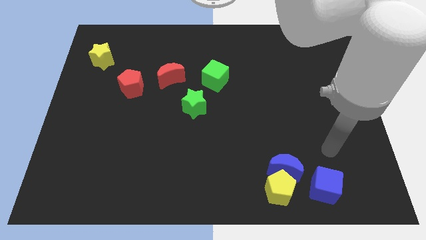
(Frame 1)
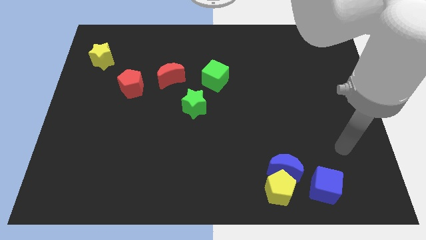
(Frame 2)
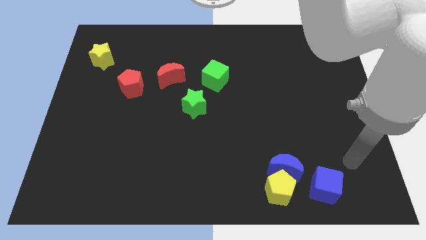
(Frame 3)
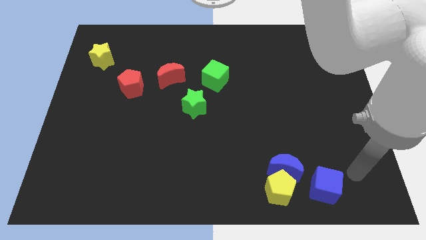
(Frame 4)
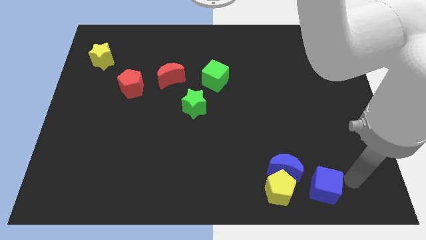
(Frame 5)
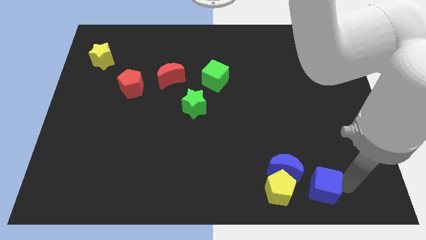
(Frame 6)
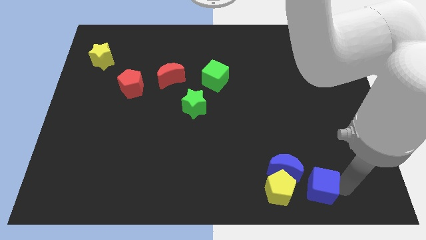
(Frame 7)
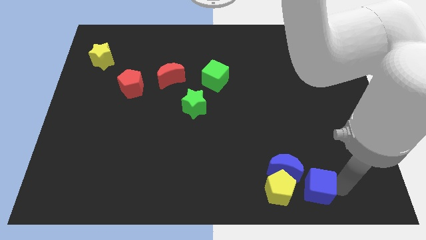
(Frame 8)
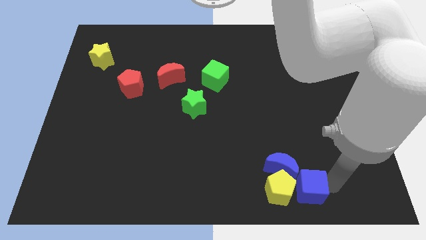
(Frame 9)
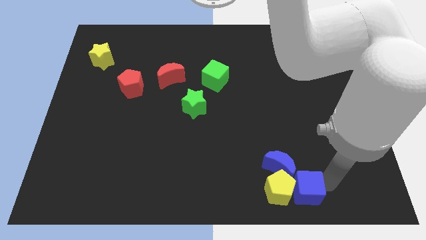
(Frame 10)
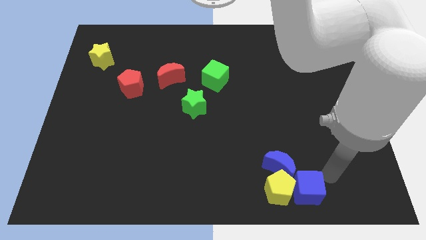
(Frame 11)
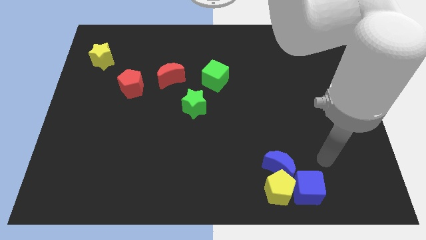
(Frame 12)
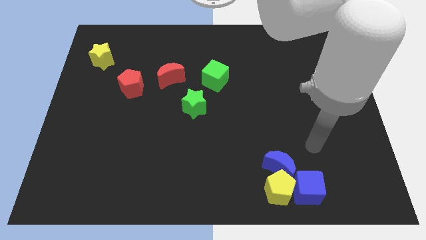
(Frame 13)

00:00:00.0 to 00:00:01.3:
push the blue cube into the blue crescent and yellow pentagon

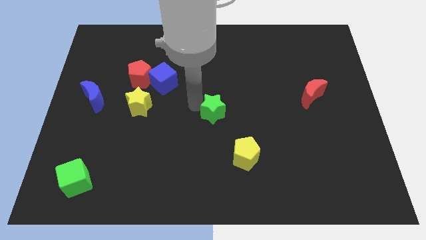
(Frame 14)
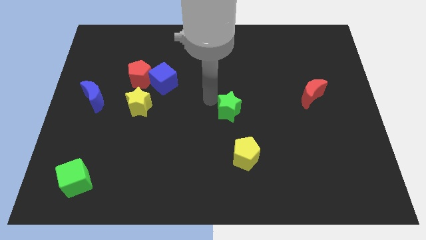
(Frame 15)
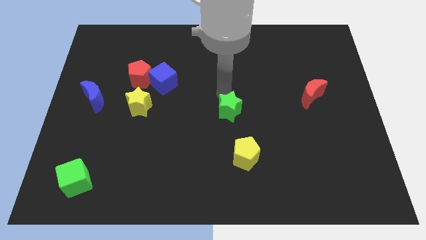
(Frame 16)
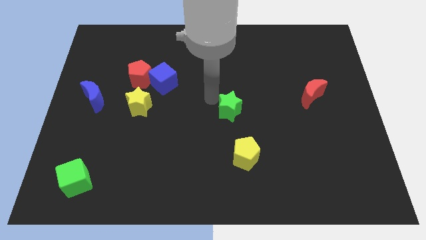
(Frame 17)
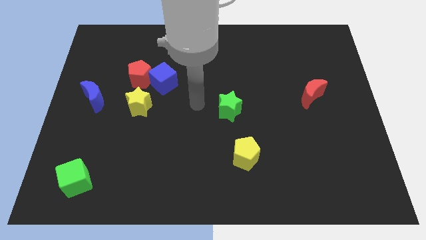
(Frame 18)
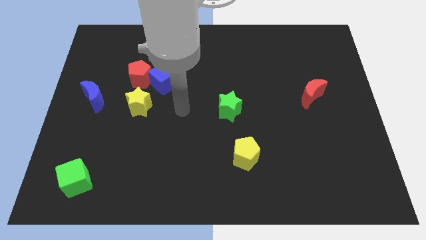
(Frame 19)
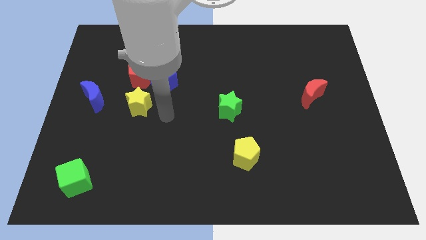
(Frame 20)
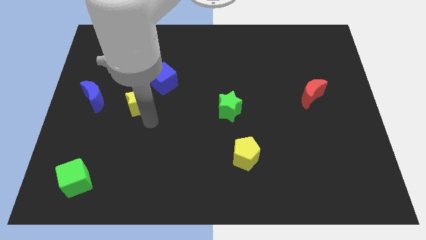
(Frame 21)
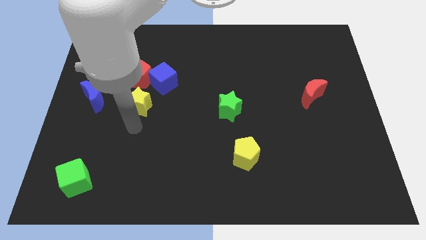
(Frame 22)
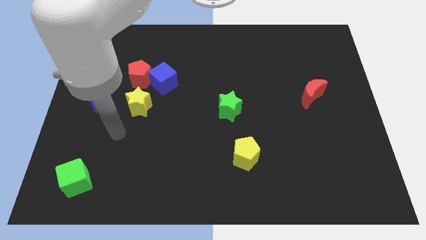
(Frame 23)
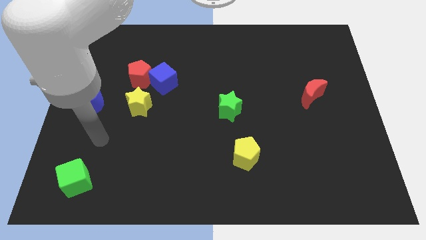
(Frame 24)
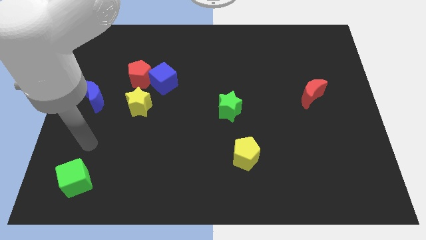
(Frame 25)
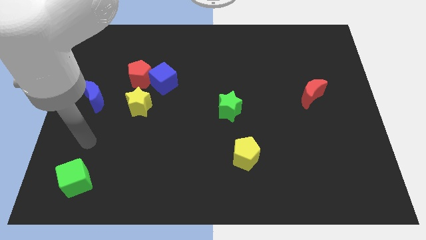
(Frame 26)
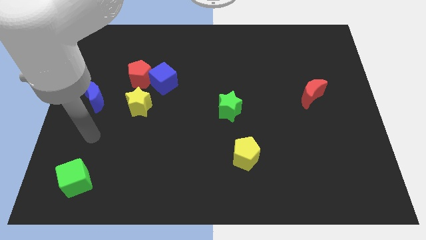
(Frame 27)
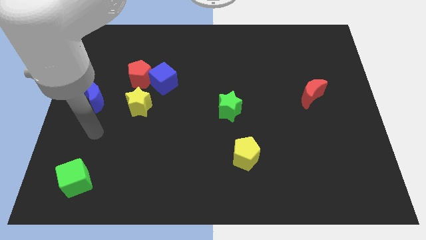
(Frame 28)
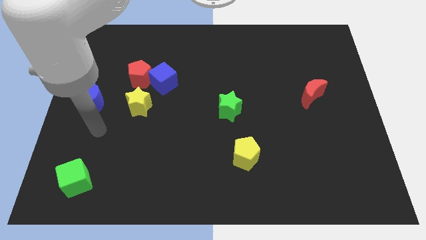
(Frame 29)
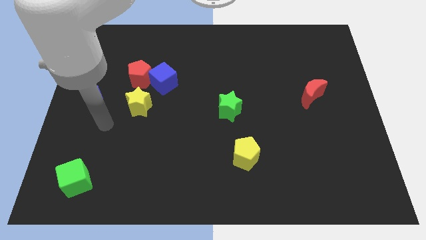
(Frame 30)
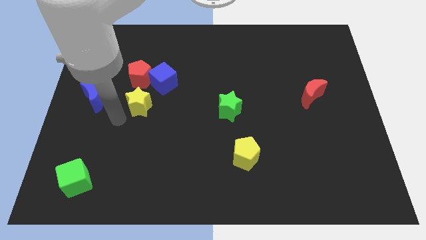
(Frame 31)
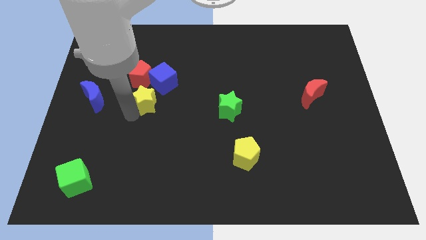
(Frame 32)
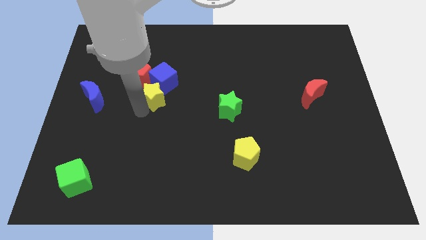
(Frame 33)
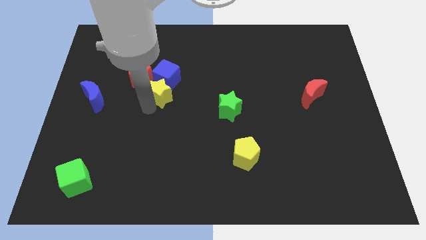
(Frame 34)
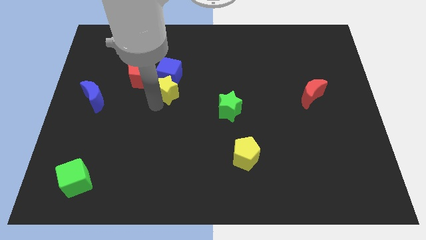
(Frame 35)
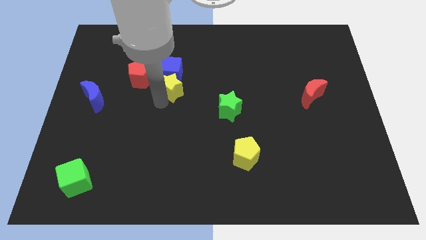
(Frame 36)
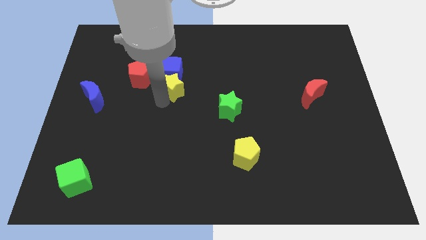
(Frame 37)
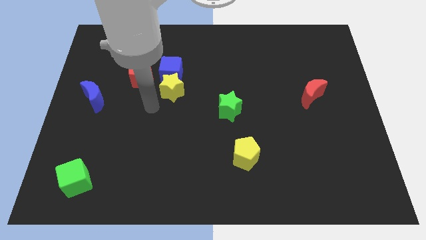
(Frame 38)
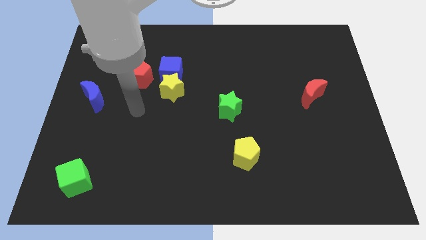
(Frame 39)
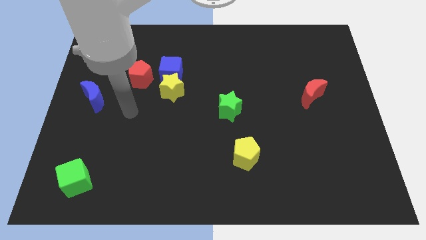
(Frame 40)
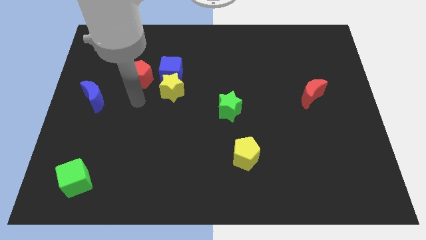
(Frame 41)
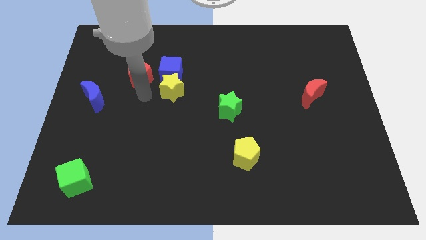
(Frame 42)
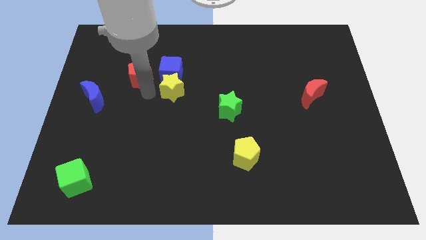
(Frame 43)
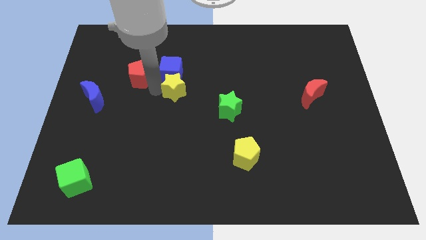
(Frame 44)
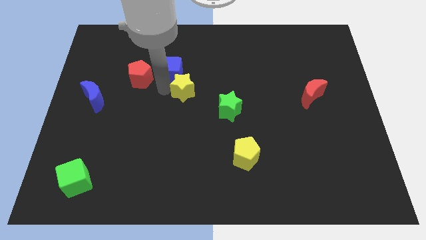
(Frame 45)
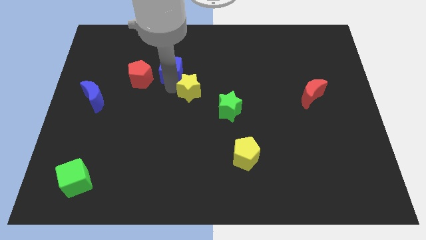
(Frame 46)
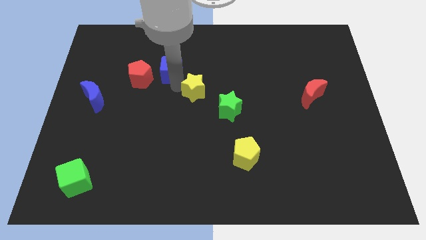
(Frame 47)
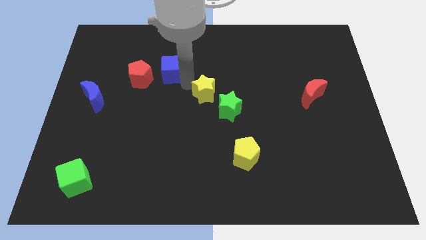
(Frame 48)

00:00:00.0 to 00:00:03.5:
push the yellow star into the blue cube

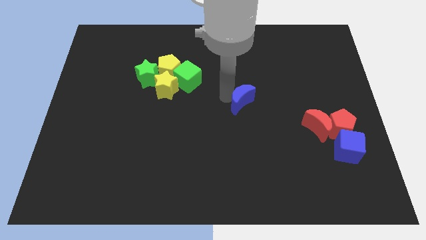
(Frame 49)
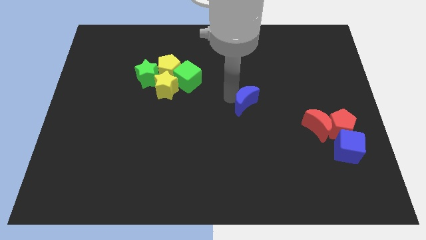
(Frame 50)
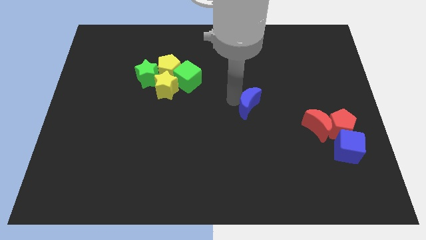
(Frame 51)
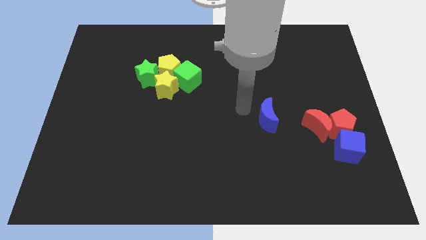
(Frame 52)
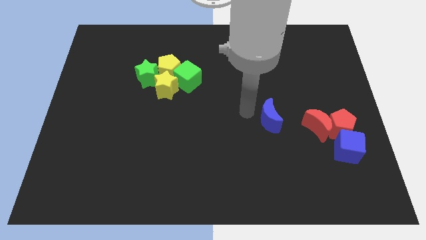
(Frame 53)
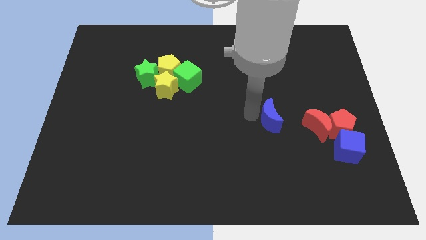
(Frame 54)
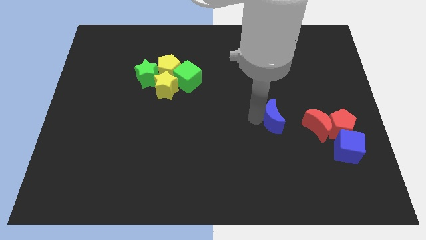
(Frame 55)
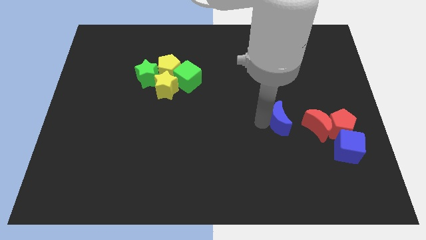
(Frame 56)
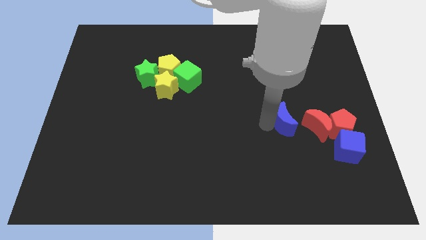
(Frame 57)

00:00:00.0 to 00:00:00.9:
move the blue moon towards the red moon

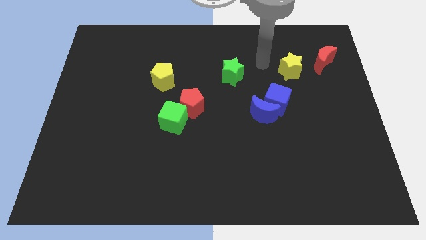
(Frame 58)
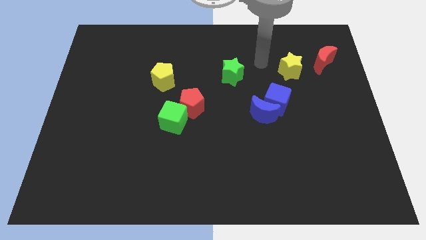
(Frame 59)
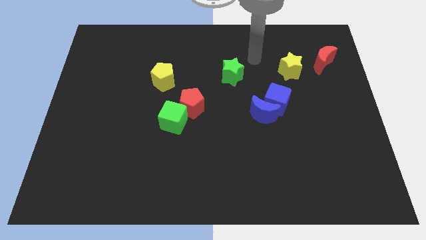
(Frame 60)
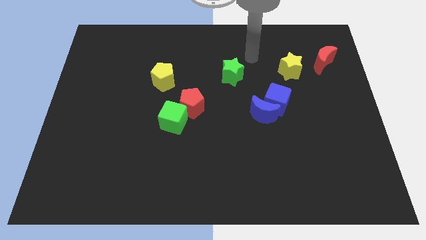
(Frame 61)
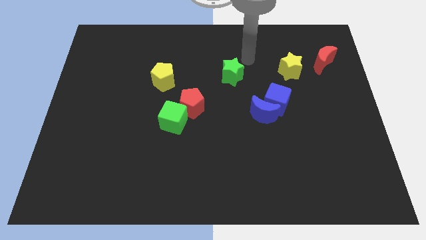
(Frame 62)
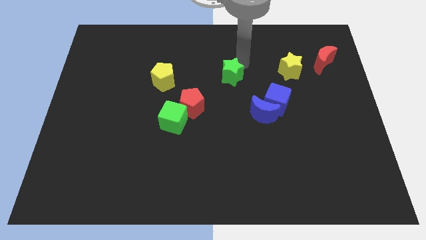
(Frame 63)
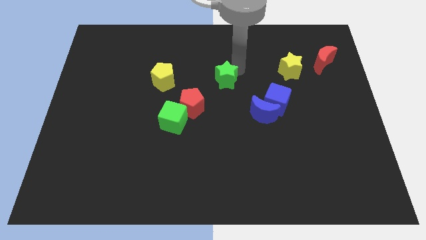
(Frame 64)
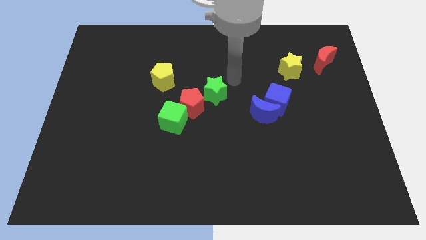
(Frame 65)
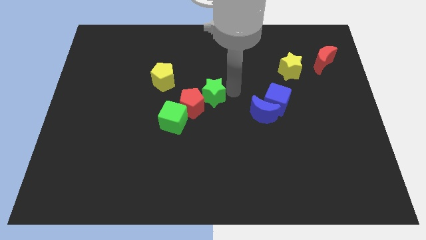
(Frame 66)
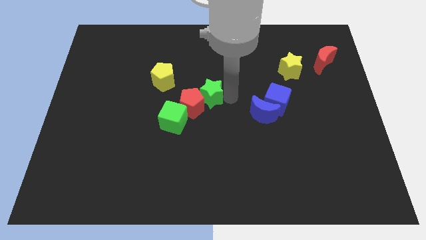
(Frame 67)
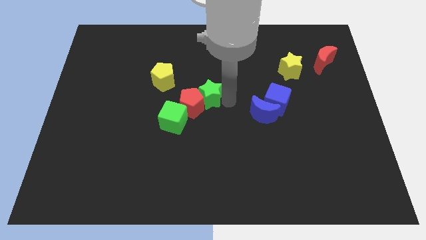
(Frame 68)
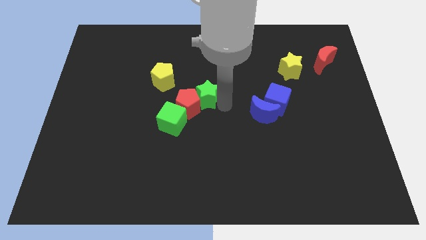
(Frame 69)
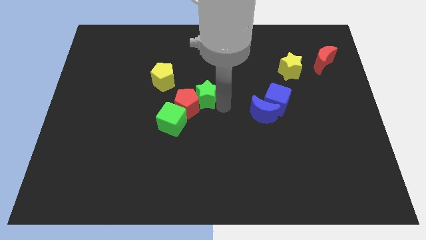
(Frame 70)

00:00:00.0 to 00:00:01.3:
push the green star into the red pentagon

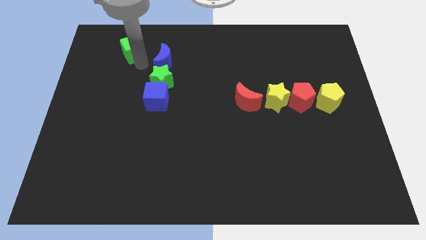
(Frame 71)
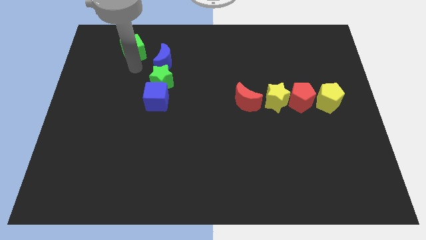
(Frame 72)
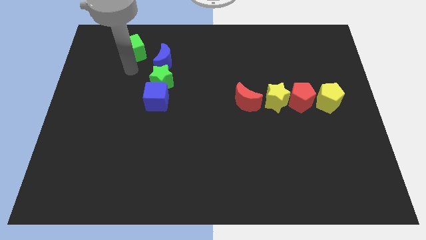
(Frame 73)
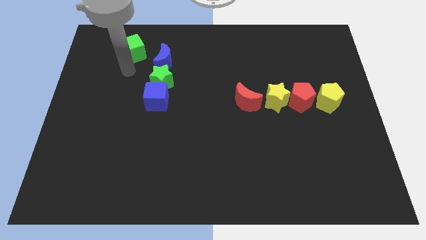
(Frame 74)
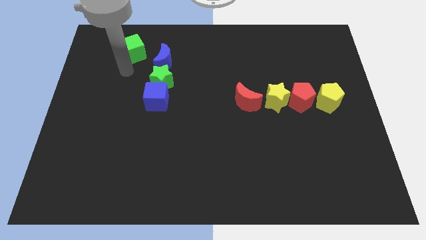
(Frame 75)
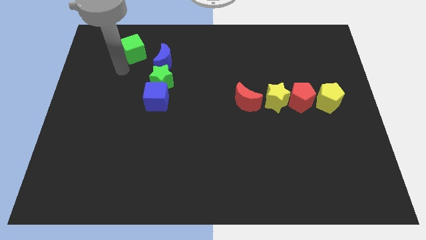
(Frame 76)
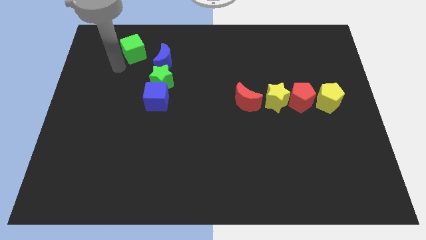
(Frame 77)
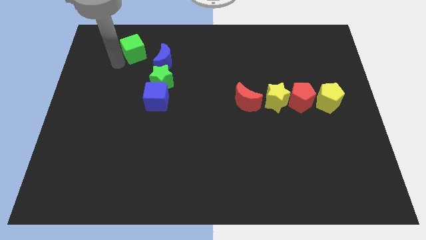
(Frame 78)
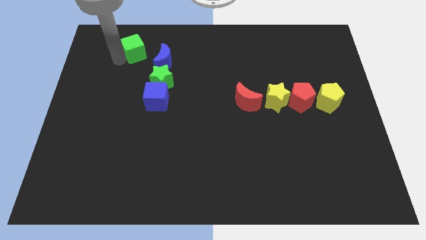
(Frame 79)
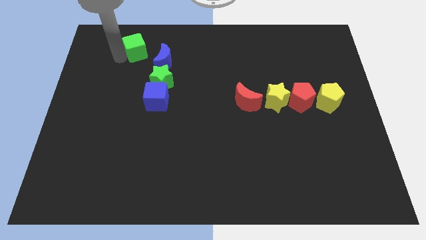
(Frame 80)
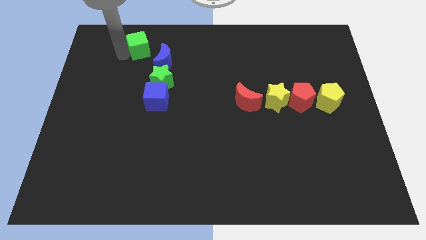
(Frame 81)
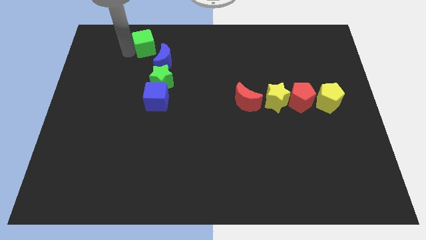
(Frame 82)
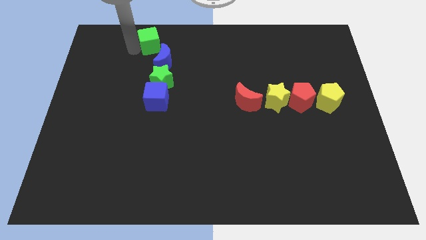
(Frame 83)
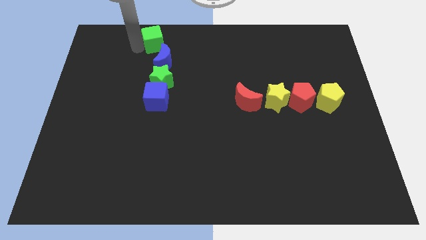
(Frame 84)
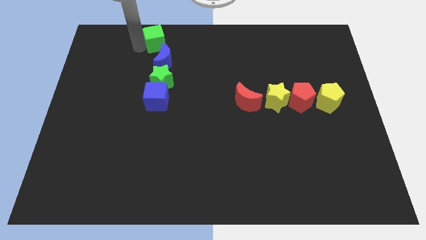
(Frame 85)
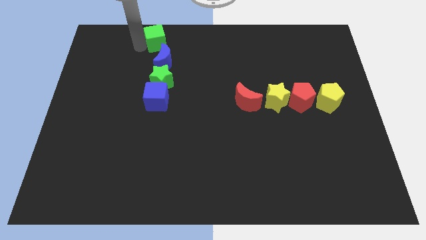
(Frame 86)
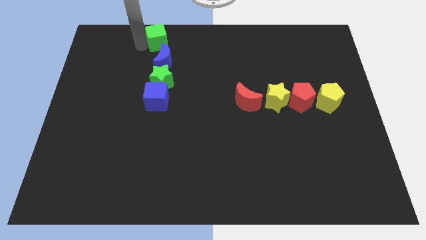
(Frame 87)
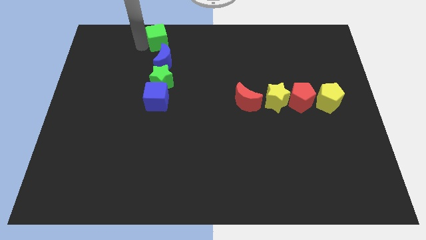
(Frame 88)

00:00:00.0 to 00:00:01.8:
place the green cube above the blue moon
